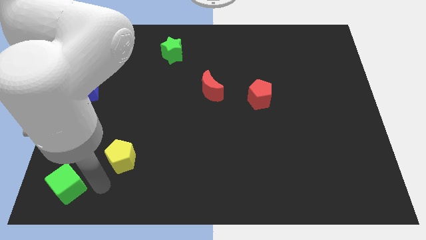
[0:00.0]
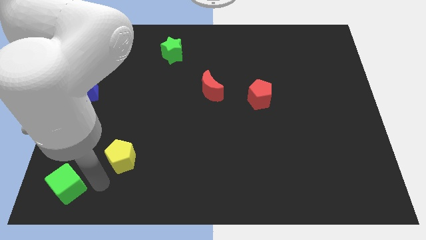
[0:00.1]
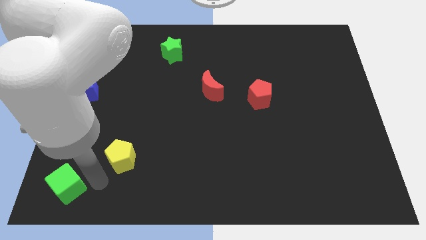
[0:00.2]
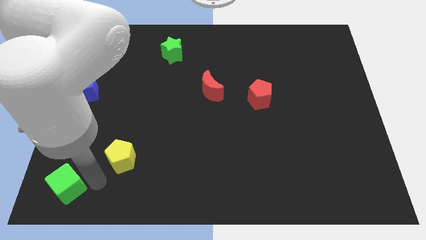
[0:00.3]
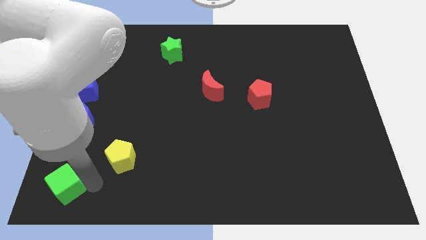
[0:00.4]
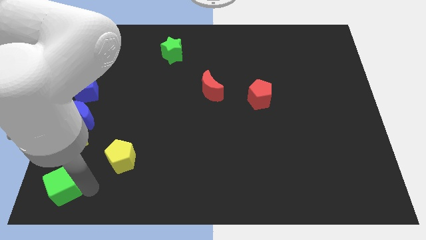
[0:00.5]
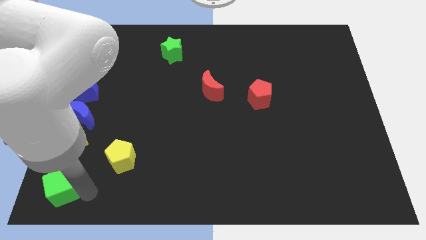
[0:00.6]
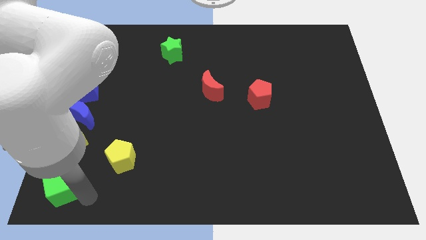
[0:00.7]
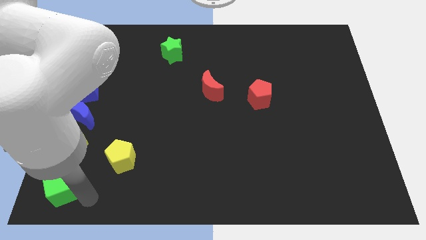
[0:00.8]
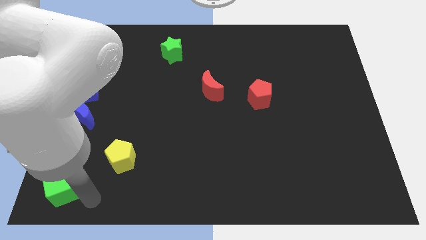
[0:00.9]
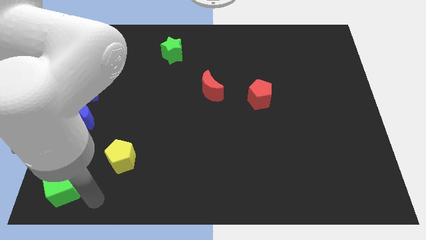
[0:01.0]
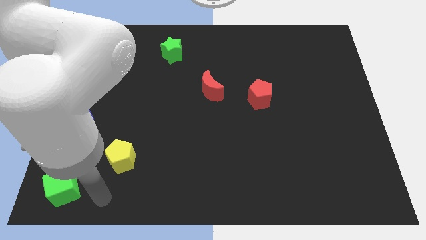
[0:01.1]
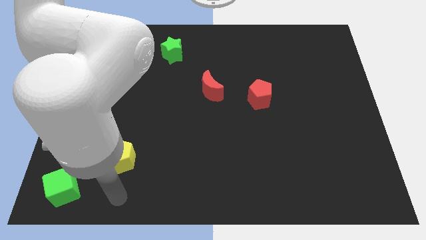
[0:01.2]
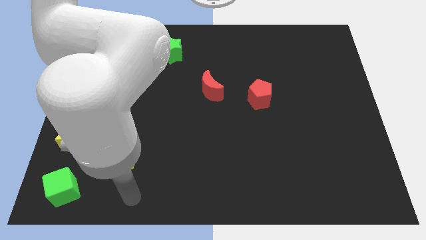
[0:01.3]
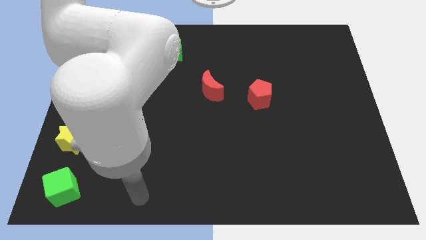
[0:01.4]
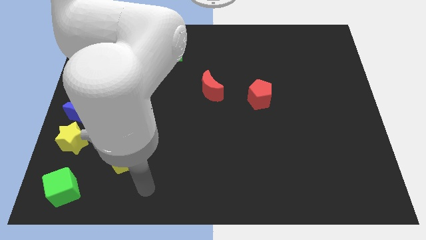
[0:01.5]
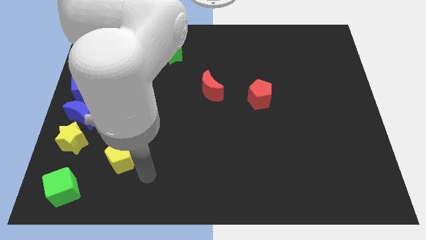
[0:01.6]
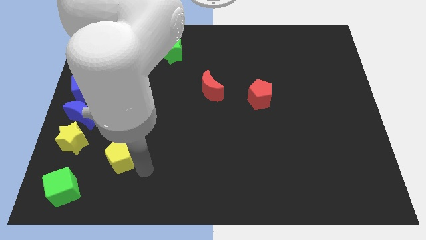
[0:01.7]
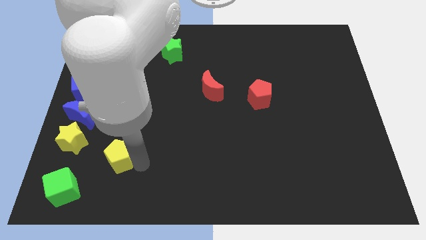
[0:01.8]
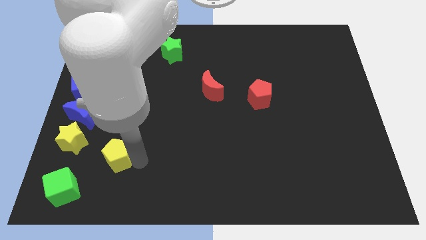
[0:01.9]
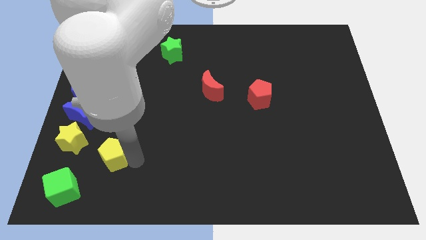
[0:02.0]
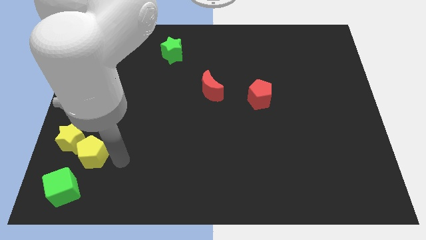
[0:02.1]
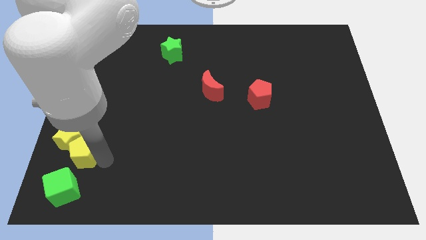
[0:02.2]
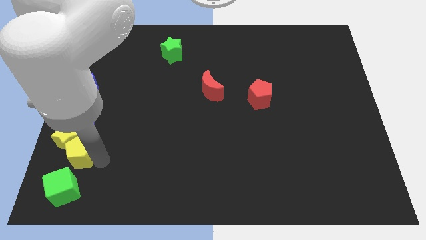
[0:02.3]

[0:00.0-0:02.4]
move yellow pentagon into the yellow star

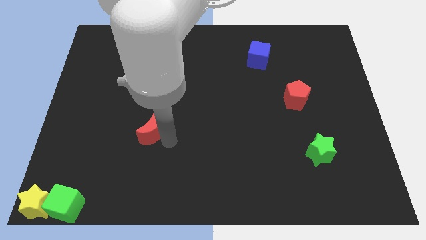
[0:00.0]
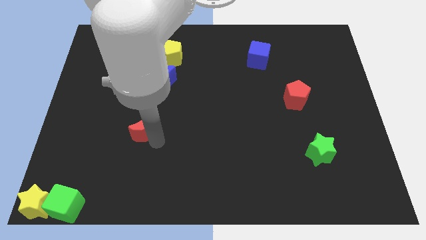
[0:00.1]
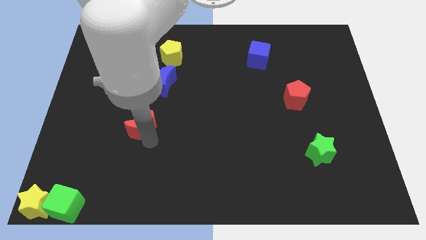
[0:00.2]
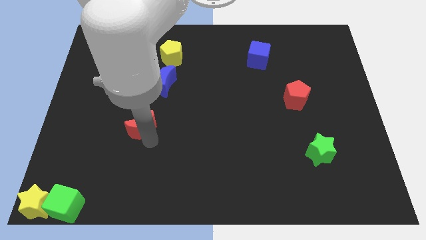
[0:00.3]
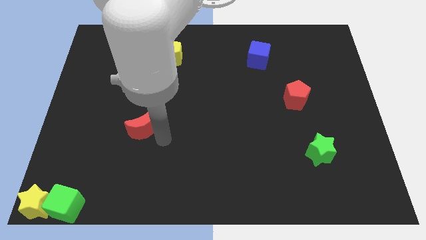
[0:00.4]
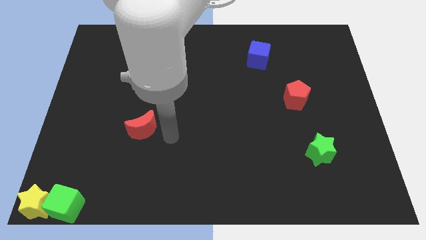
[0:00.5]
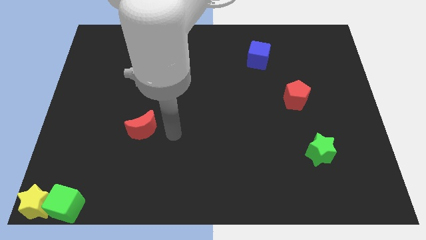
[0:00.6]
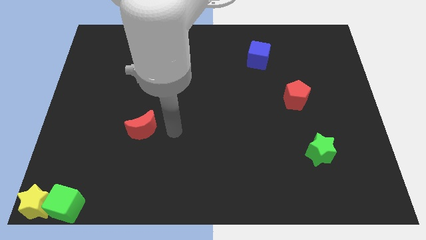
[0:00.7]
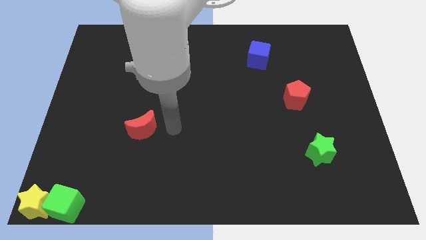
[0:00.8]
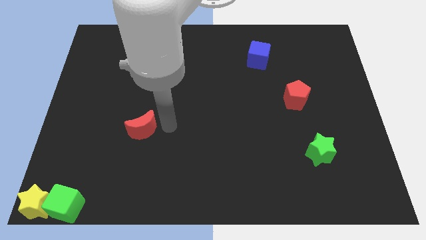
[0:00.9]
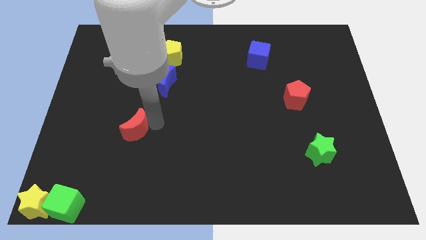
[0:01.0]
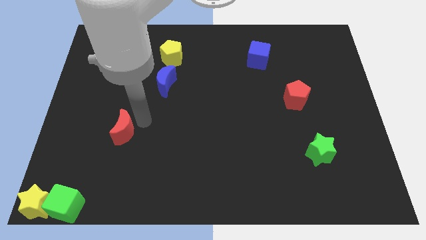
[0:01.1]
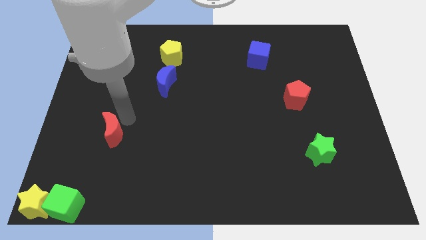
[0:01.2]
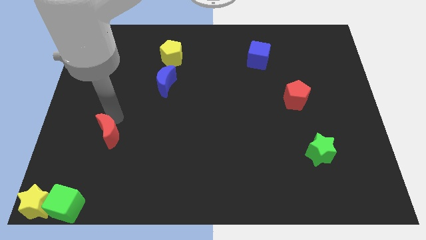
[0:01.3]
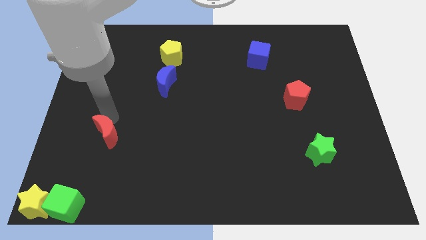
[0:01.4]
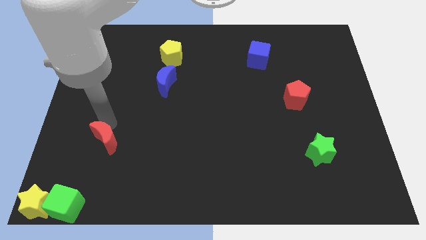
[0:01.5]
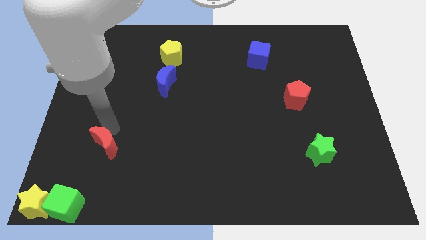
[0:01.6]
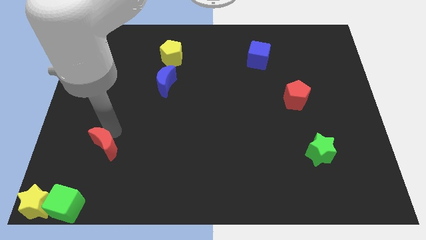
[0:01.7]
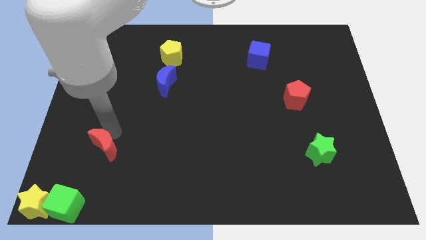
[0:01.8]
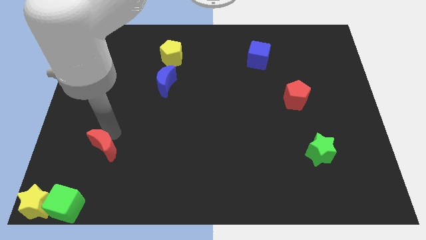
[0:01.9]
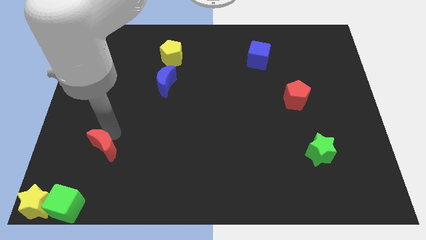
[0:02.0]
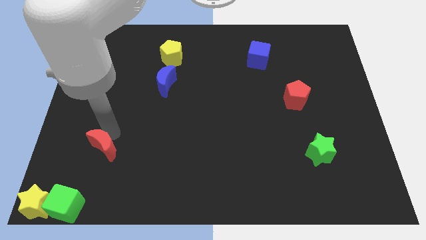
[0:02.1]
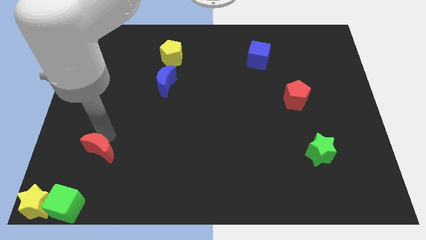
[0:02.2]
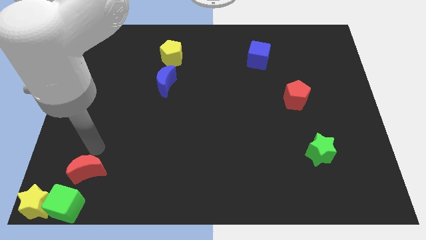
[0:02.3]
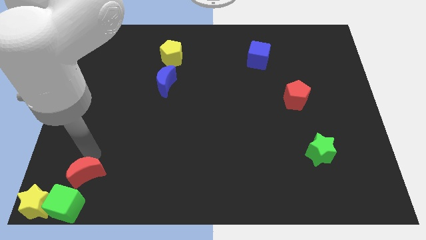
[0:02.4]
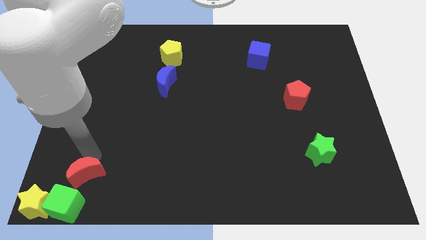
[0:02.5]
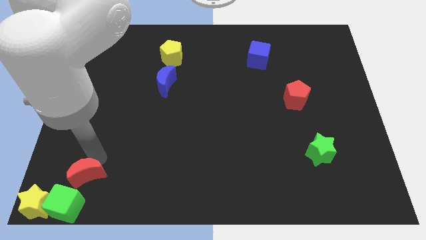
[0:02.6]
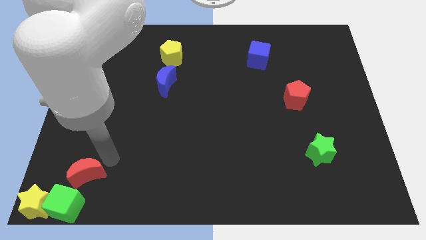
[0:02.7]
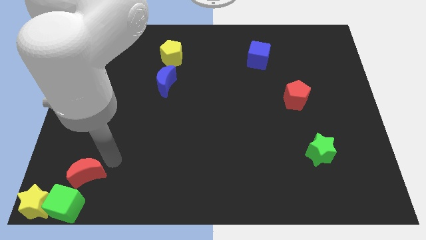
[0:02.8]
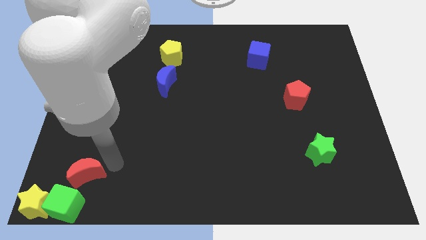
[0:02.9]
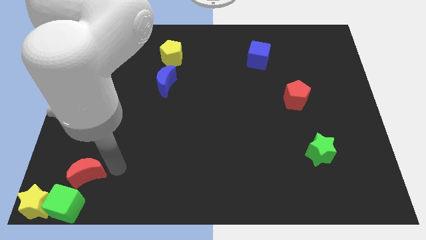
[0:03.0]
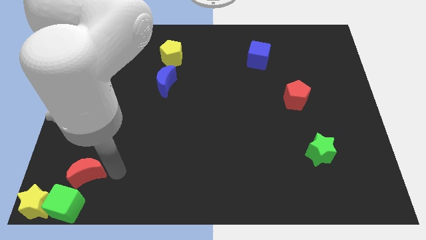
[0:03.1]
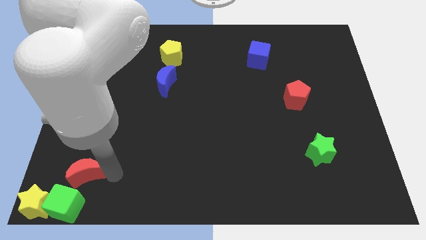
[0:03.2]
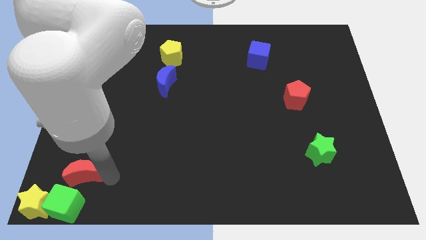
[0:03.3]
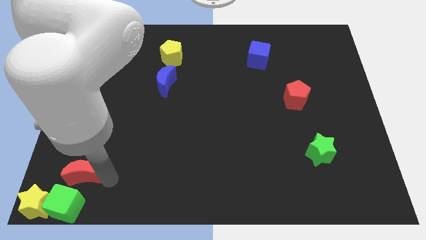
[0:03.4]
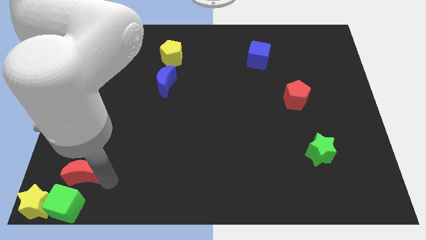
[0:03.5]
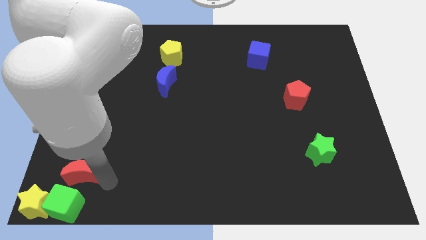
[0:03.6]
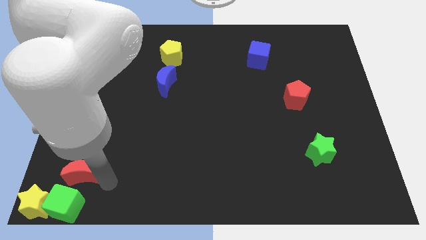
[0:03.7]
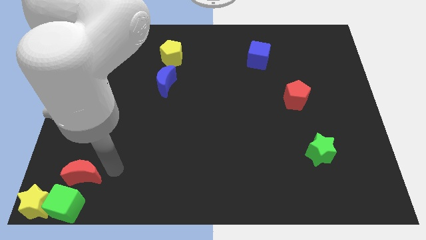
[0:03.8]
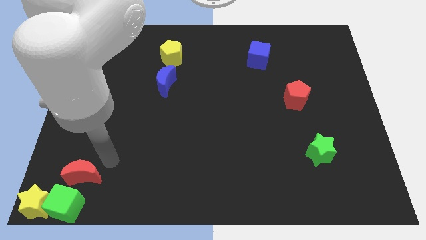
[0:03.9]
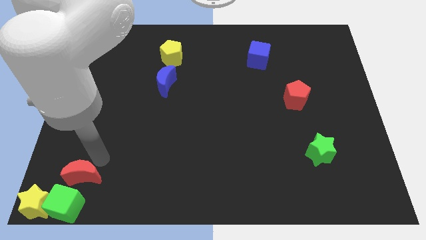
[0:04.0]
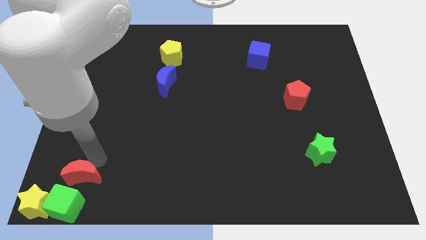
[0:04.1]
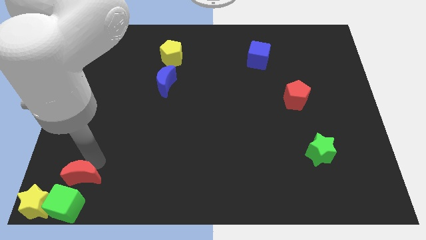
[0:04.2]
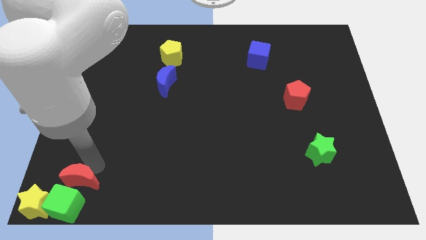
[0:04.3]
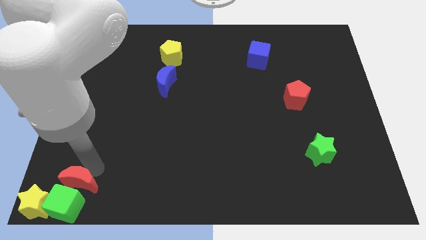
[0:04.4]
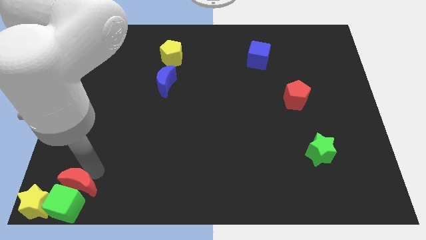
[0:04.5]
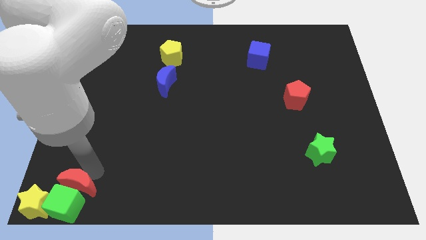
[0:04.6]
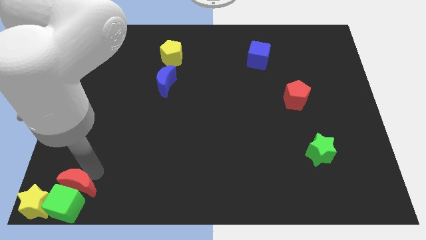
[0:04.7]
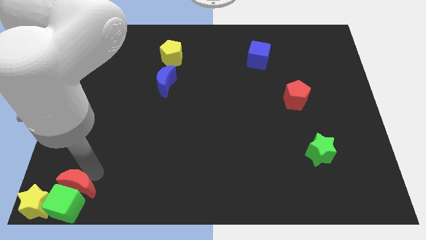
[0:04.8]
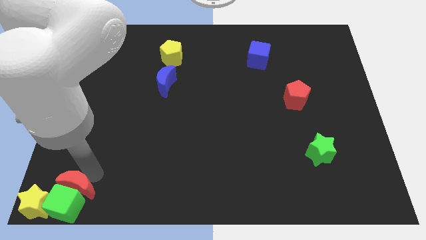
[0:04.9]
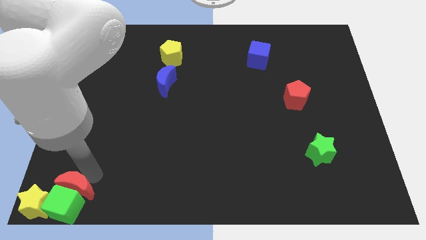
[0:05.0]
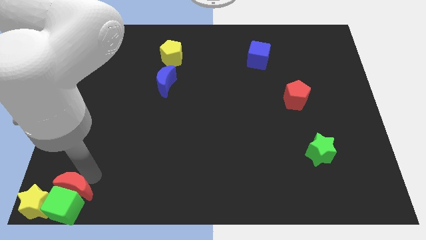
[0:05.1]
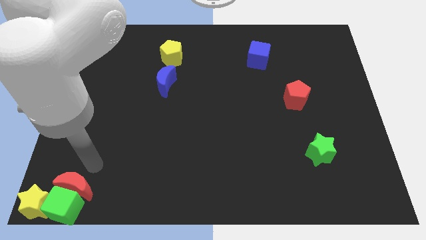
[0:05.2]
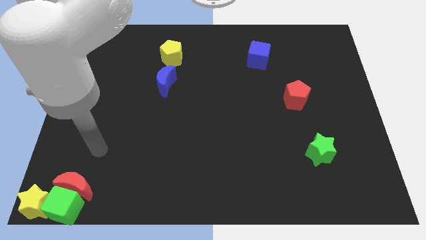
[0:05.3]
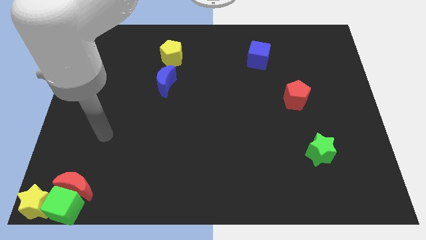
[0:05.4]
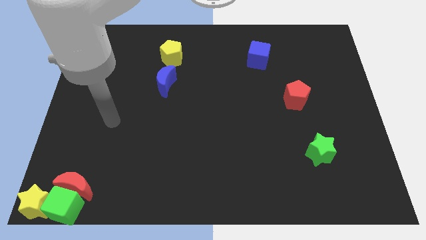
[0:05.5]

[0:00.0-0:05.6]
move the red crescent into the green cube

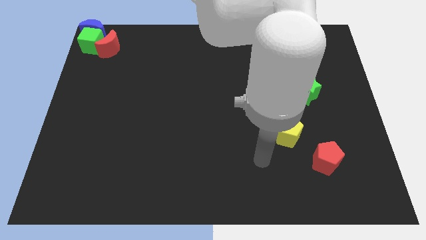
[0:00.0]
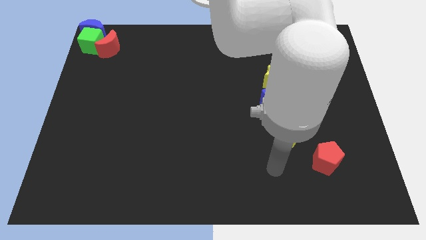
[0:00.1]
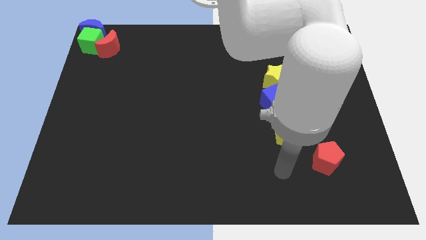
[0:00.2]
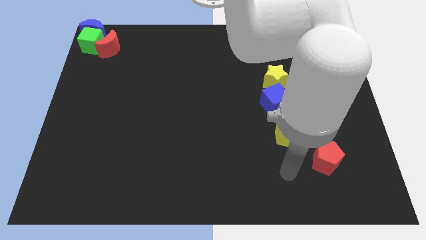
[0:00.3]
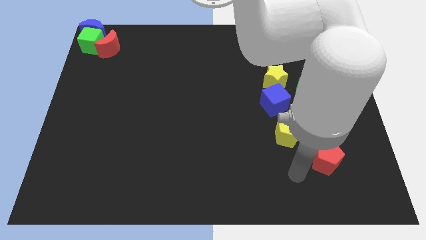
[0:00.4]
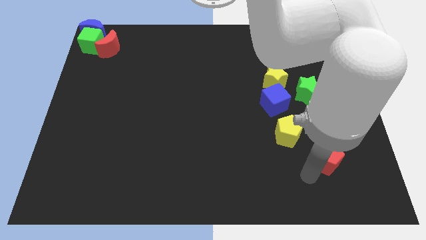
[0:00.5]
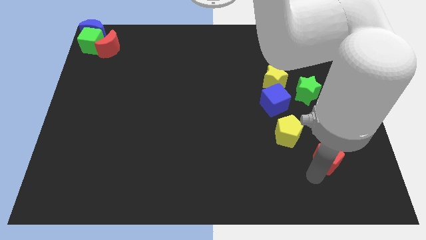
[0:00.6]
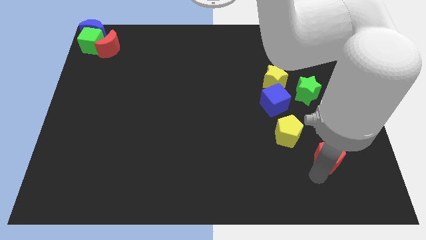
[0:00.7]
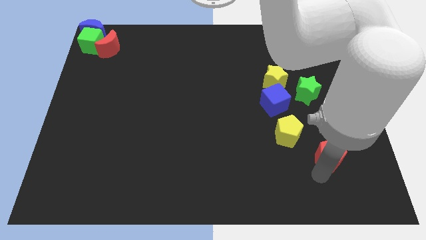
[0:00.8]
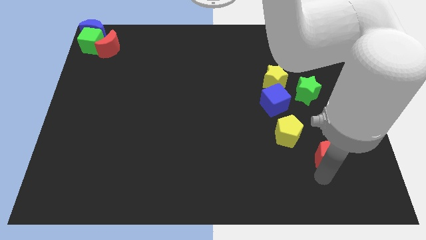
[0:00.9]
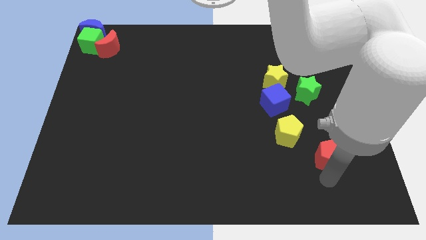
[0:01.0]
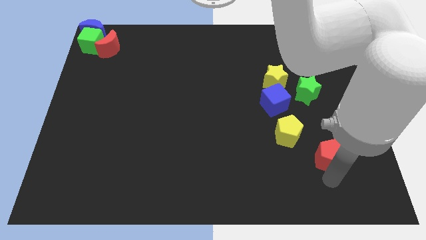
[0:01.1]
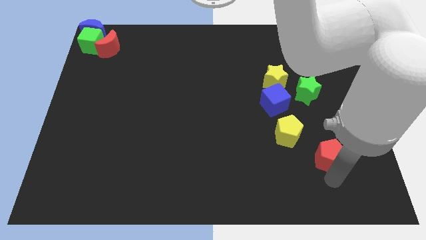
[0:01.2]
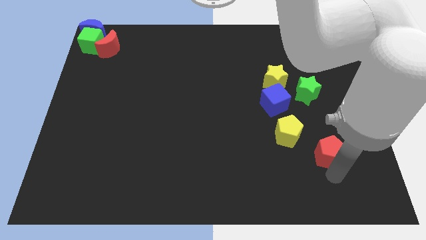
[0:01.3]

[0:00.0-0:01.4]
place the arm below the red pentagon
